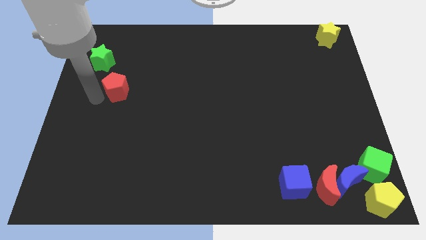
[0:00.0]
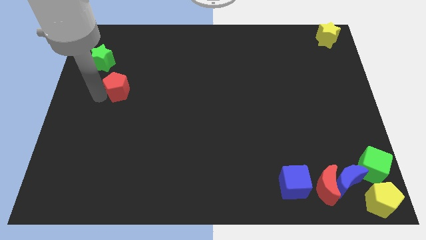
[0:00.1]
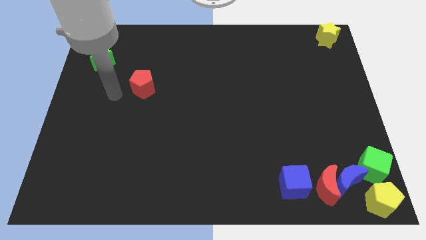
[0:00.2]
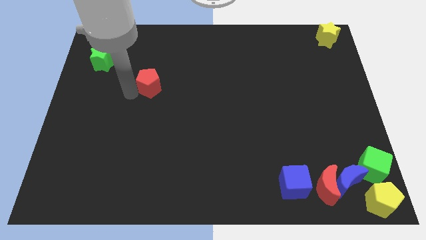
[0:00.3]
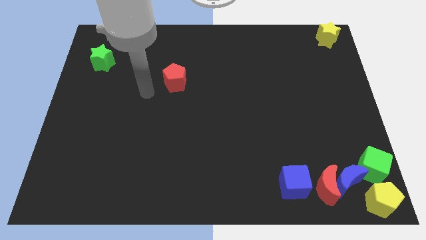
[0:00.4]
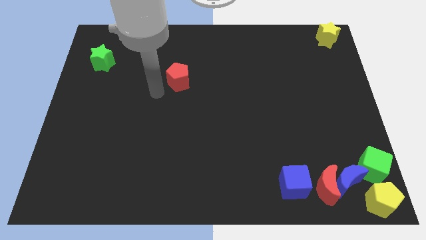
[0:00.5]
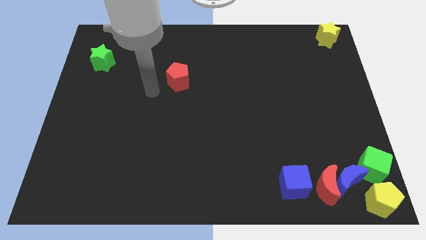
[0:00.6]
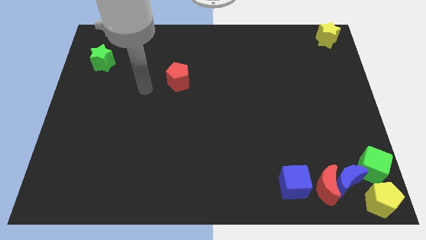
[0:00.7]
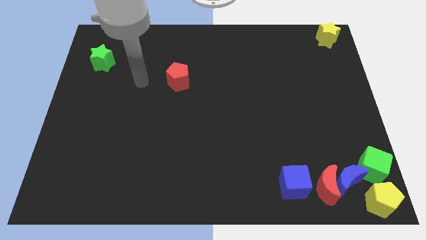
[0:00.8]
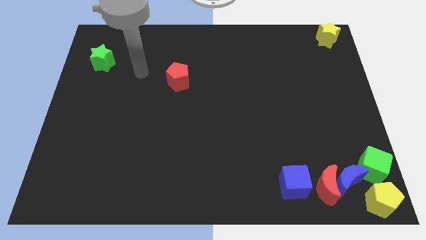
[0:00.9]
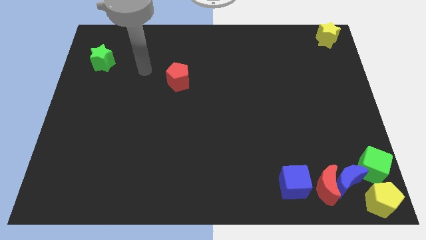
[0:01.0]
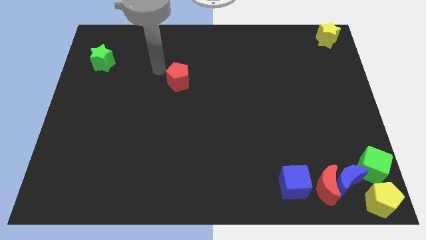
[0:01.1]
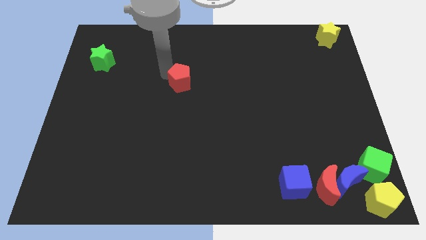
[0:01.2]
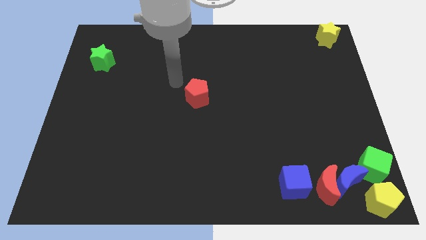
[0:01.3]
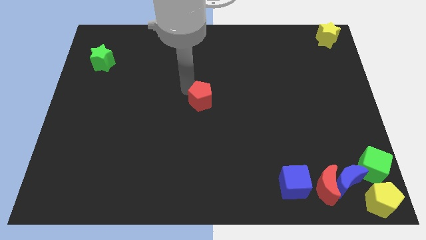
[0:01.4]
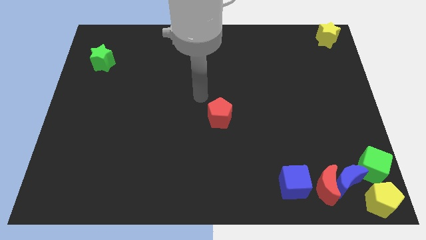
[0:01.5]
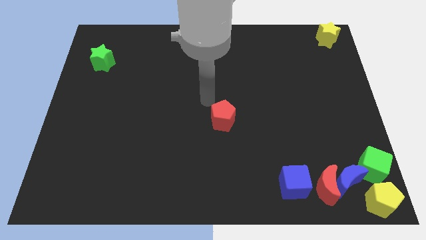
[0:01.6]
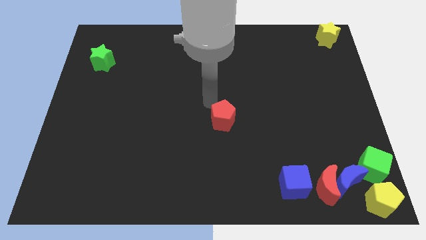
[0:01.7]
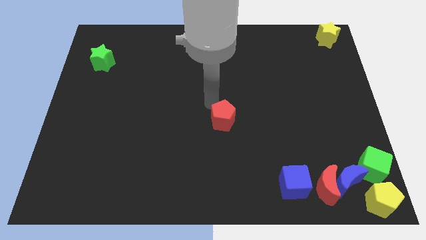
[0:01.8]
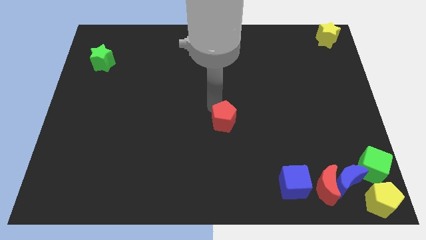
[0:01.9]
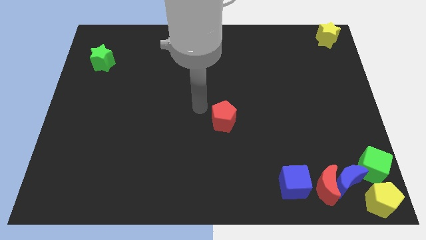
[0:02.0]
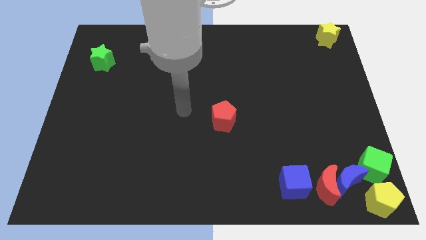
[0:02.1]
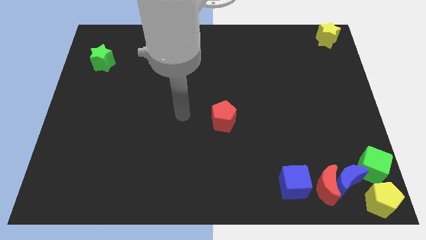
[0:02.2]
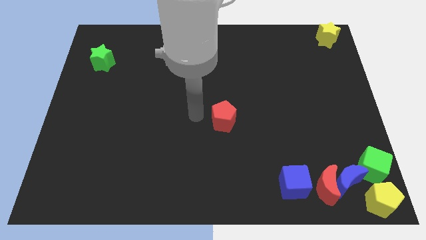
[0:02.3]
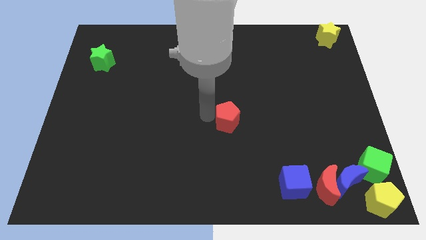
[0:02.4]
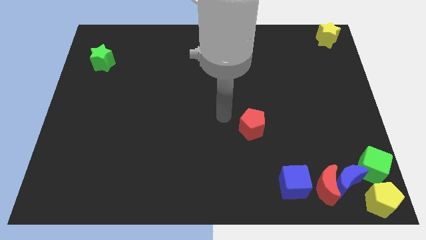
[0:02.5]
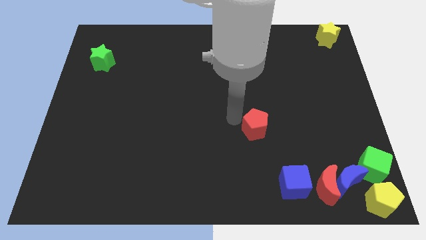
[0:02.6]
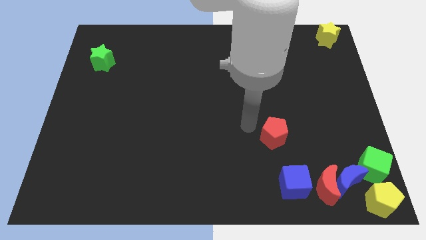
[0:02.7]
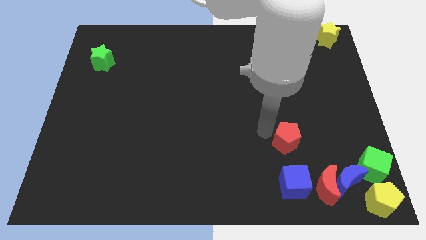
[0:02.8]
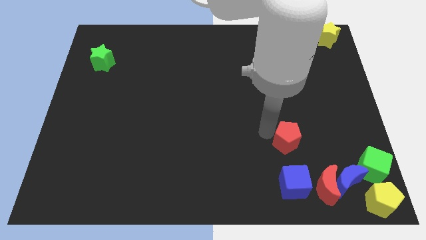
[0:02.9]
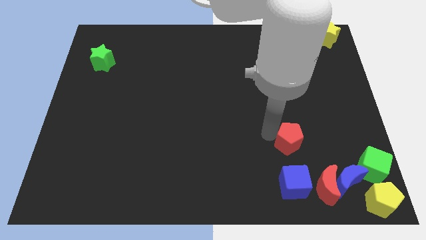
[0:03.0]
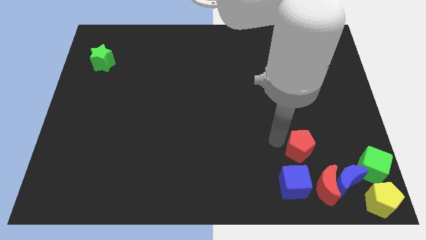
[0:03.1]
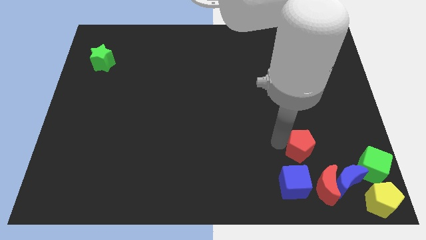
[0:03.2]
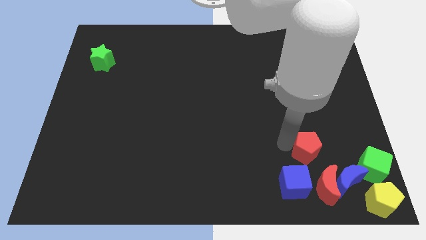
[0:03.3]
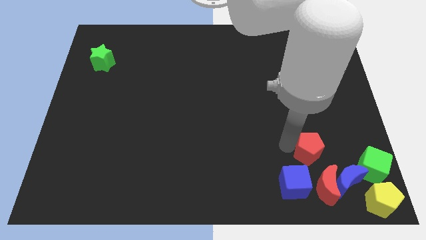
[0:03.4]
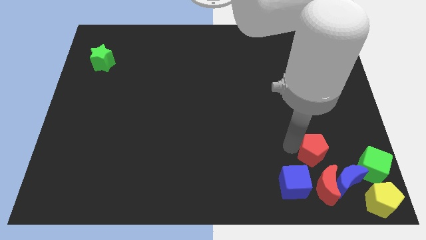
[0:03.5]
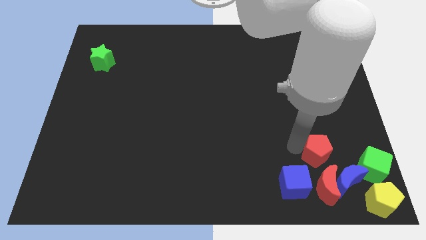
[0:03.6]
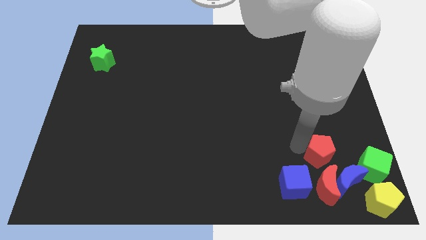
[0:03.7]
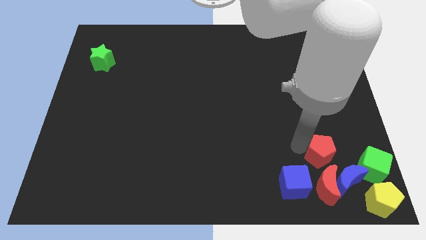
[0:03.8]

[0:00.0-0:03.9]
move the red pentagon above the red moon

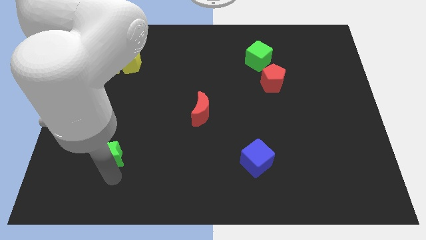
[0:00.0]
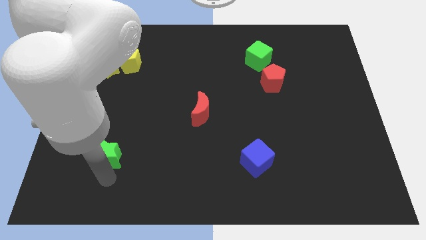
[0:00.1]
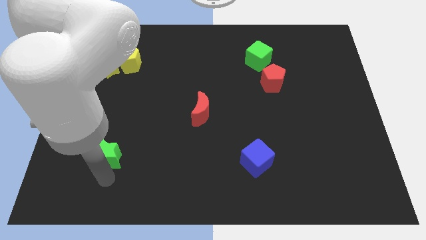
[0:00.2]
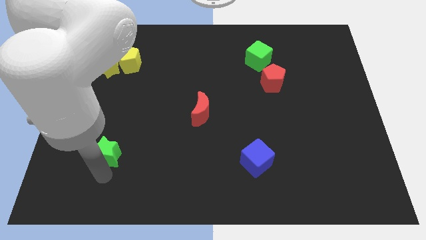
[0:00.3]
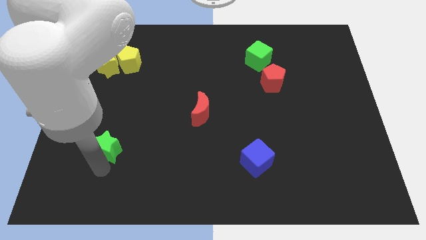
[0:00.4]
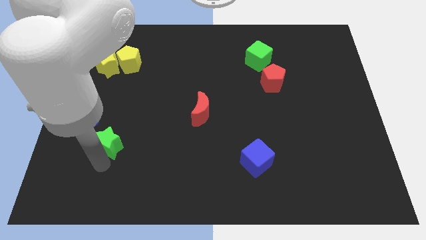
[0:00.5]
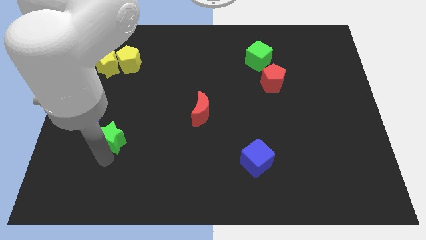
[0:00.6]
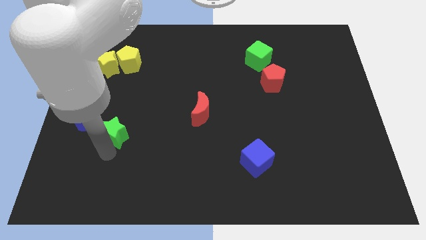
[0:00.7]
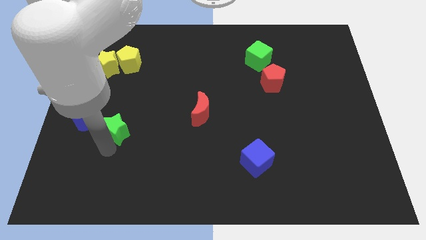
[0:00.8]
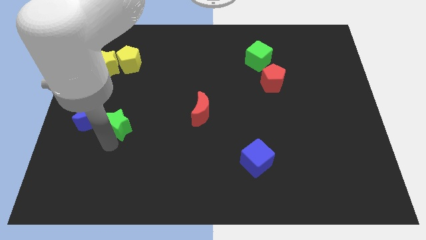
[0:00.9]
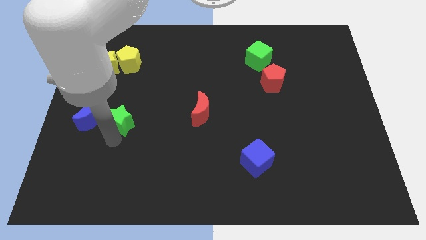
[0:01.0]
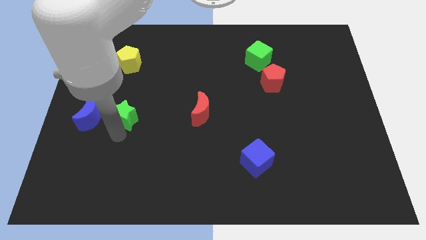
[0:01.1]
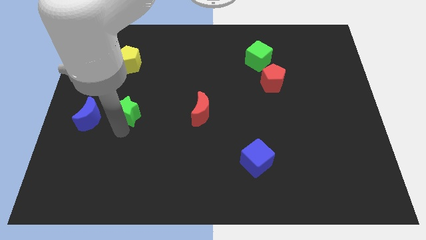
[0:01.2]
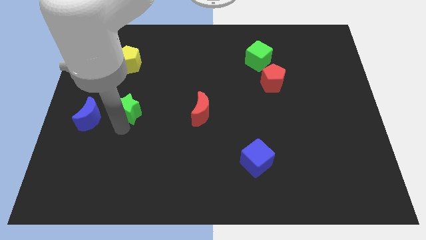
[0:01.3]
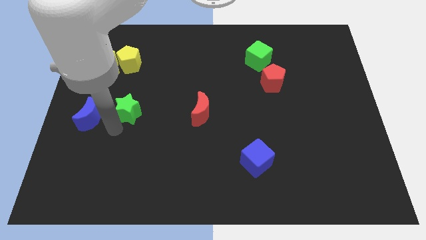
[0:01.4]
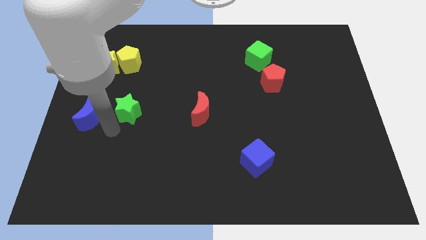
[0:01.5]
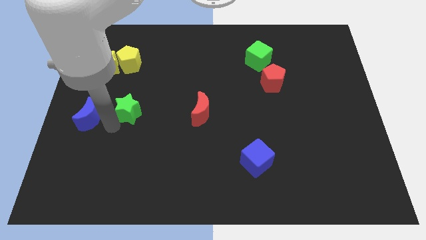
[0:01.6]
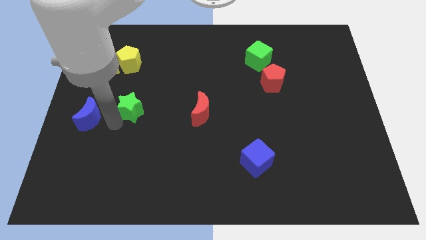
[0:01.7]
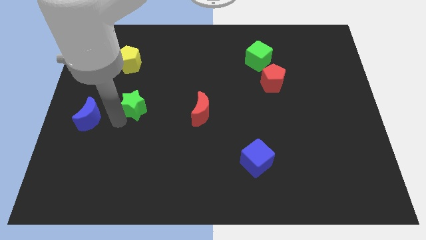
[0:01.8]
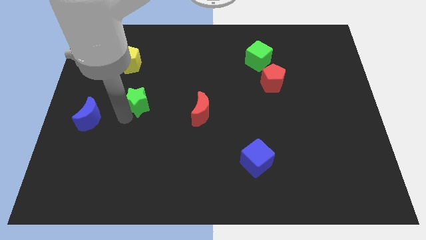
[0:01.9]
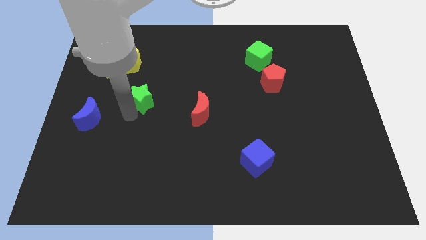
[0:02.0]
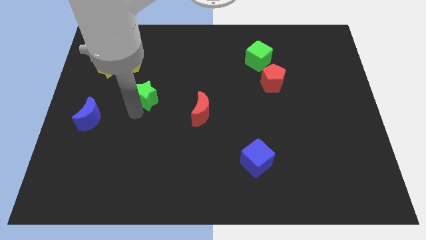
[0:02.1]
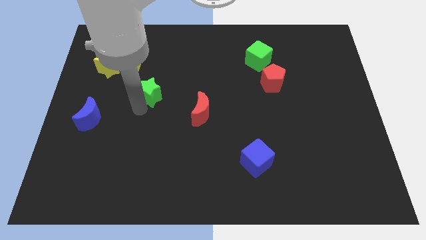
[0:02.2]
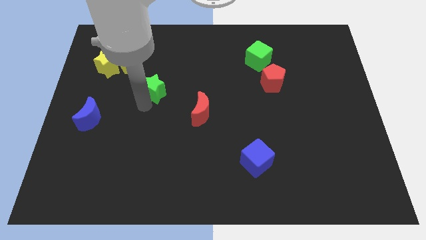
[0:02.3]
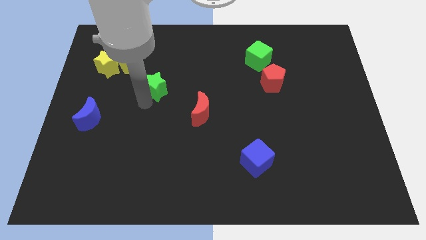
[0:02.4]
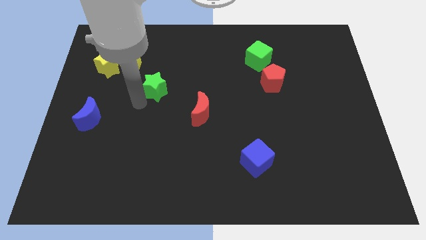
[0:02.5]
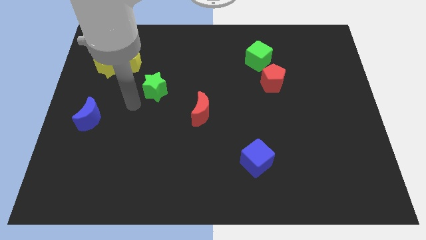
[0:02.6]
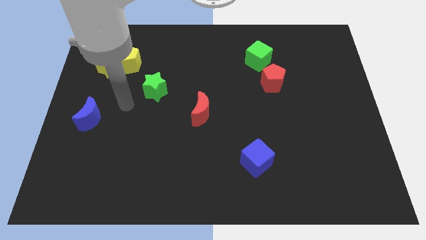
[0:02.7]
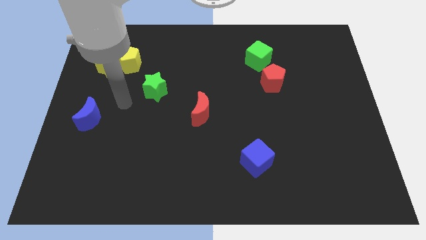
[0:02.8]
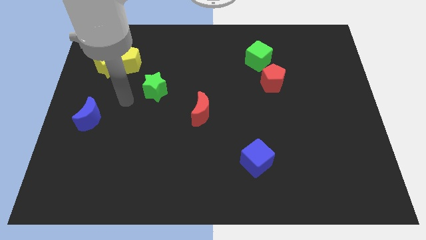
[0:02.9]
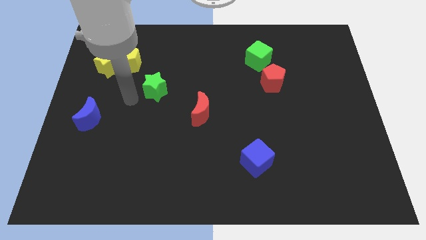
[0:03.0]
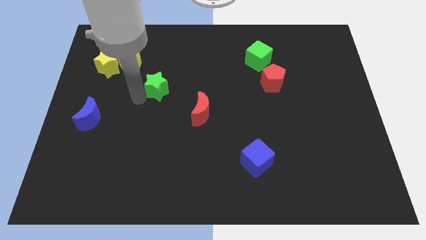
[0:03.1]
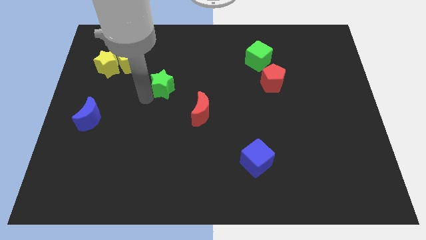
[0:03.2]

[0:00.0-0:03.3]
move the green star in between the red crescent and yellow pentagon

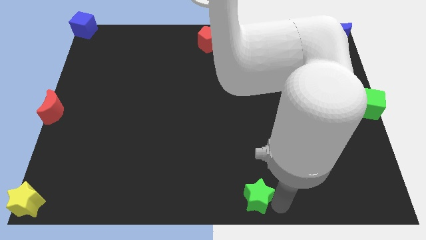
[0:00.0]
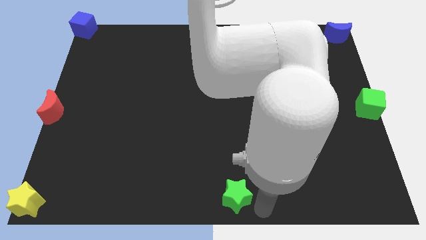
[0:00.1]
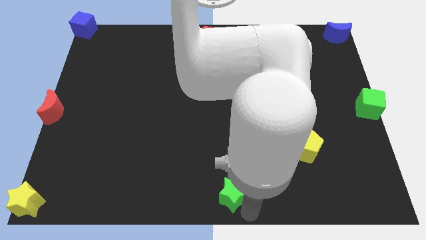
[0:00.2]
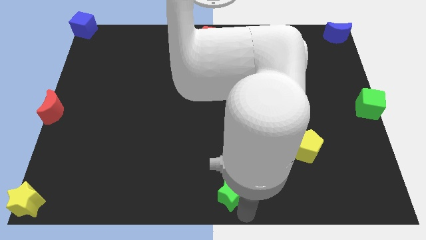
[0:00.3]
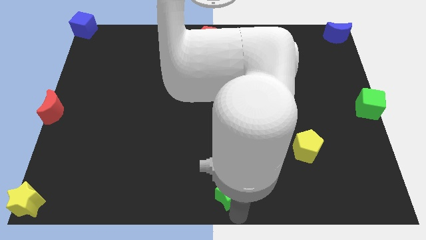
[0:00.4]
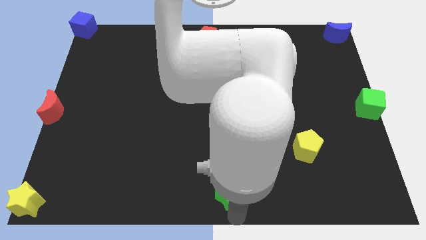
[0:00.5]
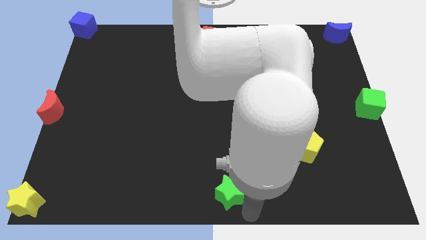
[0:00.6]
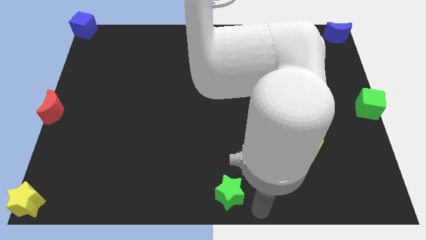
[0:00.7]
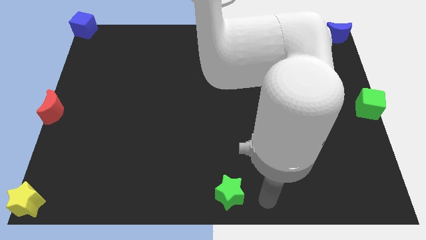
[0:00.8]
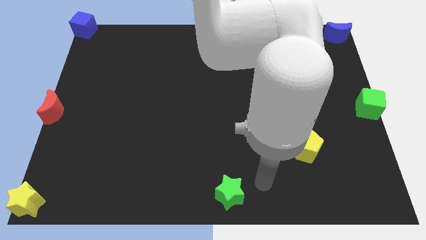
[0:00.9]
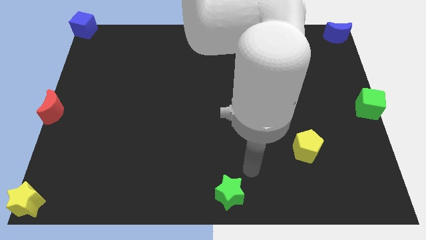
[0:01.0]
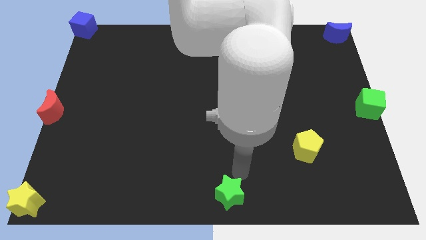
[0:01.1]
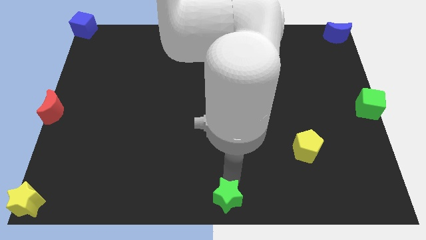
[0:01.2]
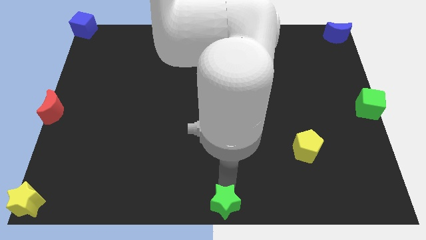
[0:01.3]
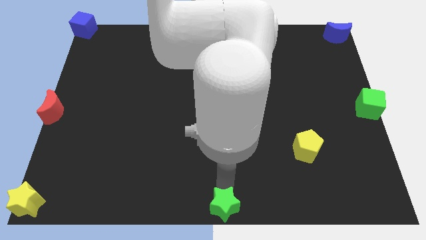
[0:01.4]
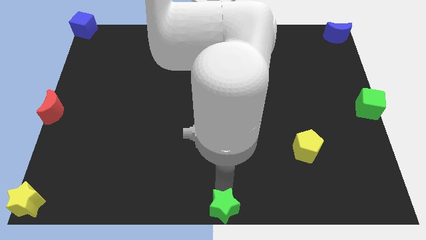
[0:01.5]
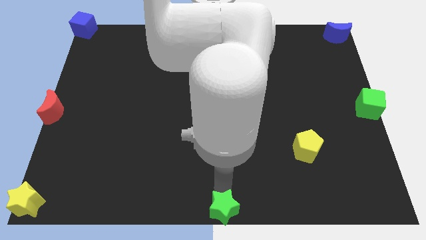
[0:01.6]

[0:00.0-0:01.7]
push the green star to the bottom center of the board
